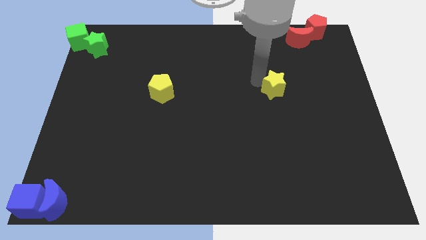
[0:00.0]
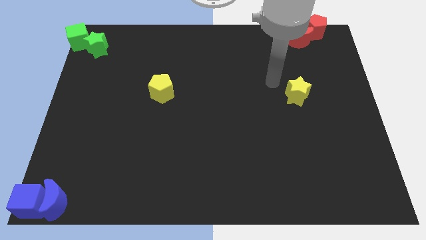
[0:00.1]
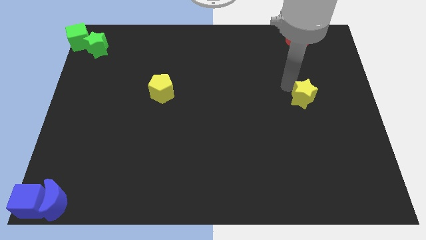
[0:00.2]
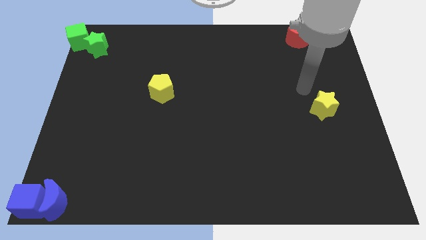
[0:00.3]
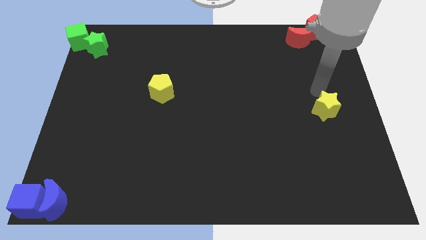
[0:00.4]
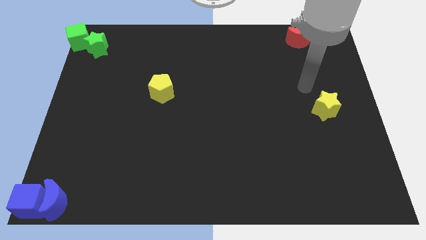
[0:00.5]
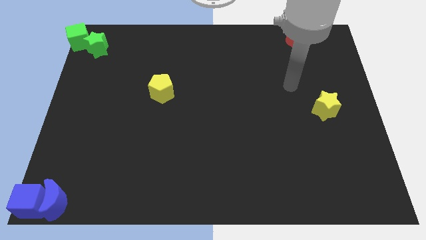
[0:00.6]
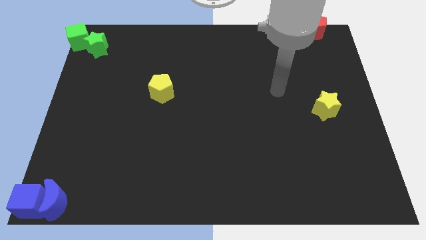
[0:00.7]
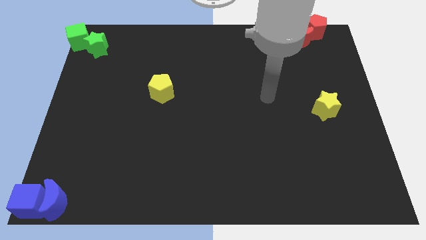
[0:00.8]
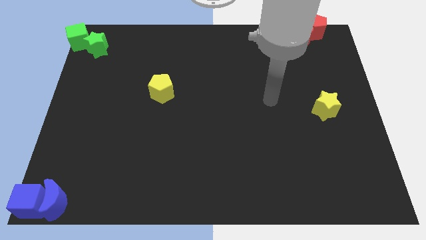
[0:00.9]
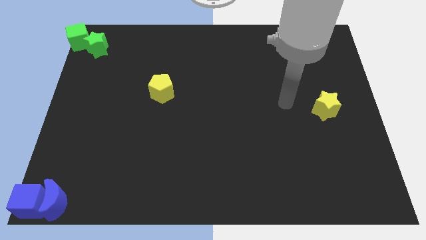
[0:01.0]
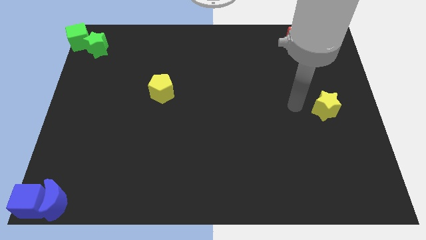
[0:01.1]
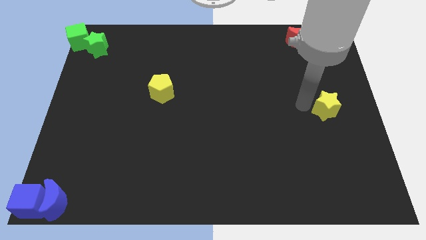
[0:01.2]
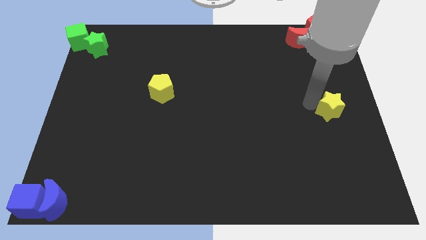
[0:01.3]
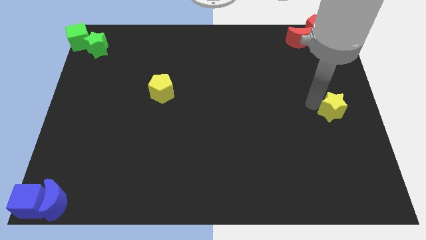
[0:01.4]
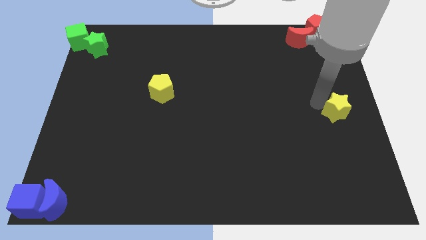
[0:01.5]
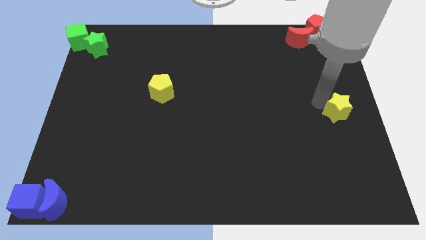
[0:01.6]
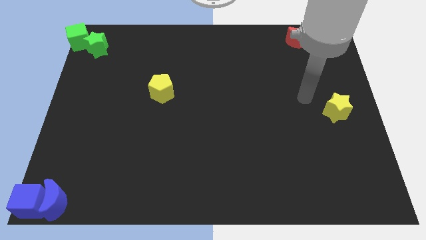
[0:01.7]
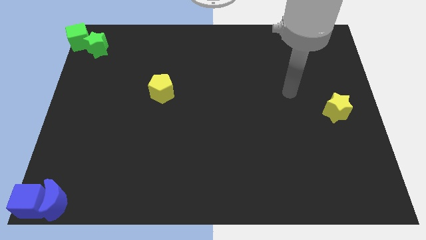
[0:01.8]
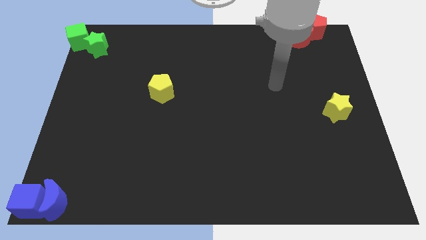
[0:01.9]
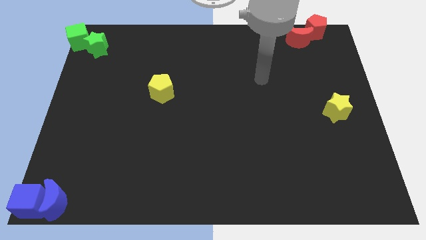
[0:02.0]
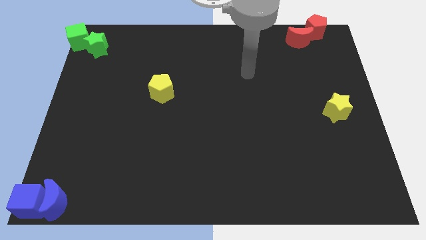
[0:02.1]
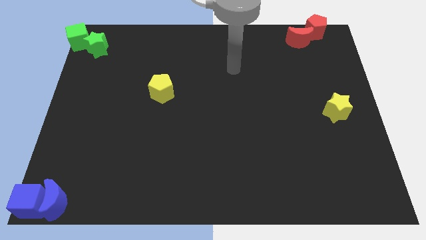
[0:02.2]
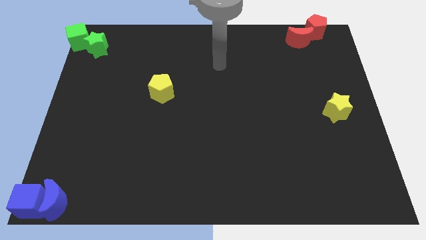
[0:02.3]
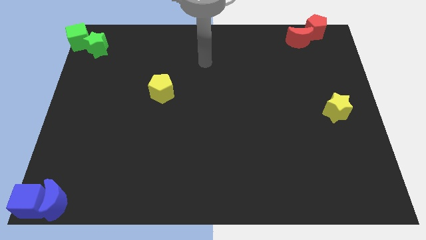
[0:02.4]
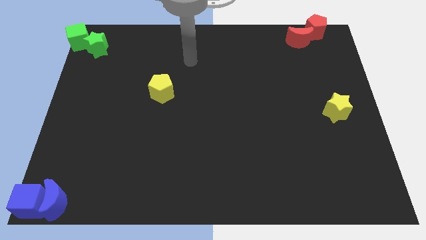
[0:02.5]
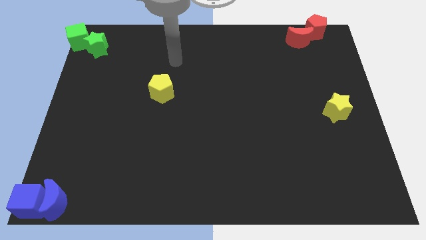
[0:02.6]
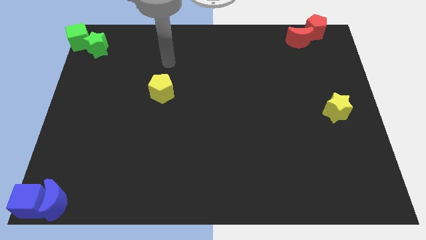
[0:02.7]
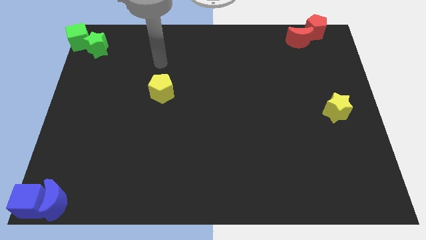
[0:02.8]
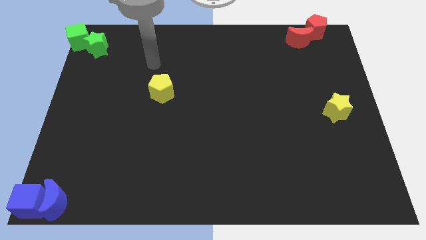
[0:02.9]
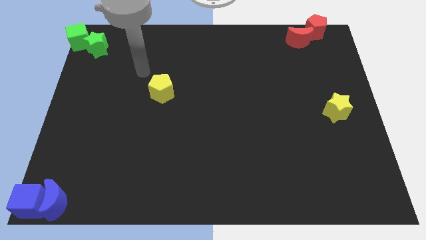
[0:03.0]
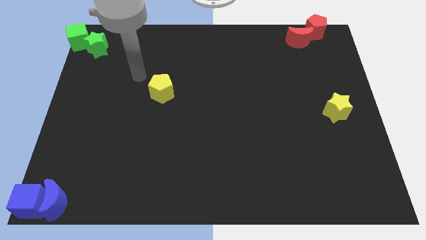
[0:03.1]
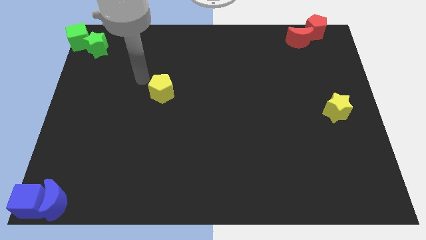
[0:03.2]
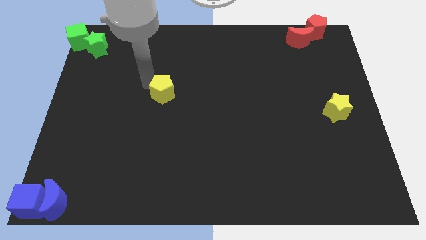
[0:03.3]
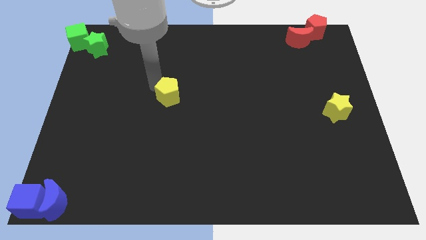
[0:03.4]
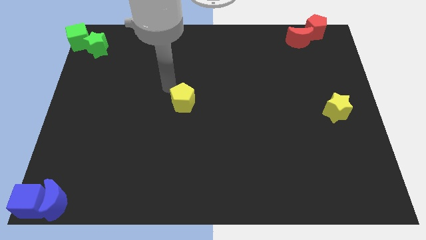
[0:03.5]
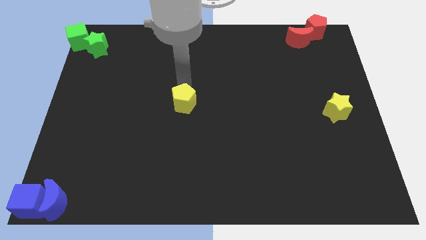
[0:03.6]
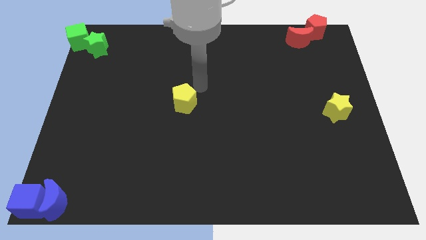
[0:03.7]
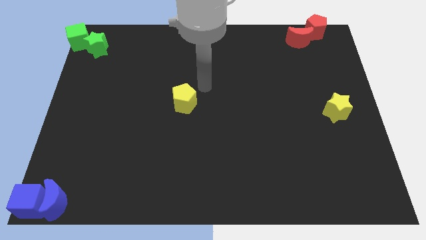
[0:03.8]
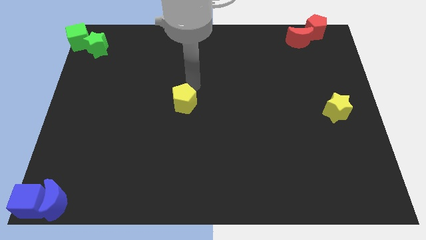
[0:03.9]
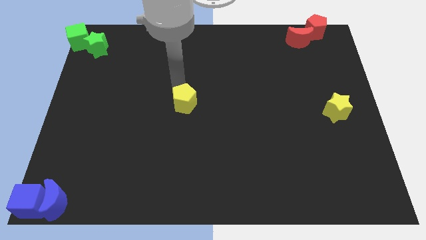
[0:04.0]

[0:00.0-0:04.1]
move the yellow star parallel to the right of the yellow pentagon

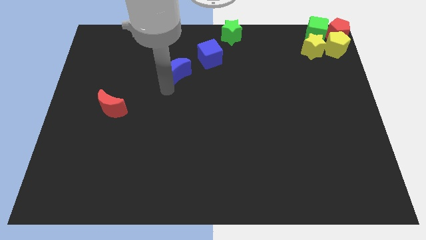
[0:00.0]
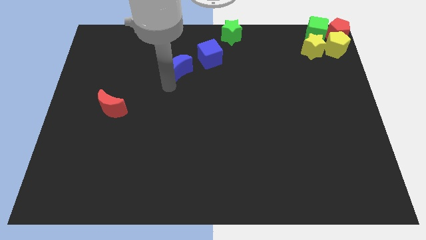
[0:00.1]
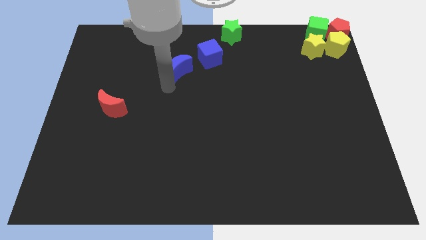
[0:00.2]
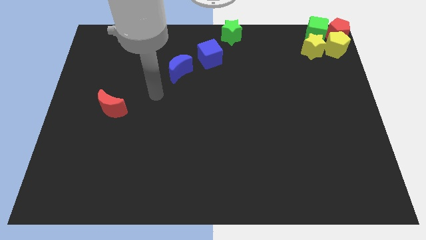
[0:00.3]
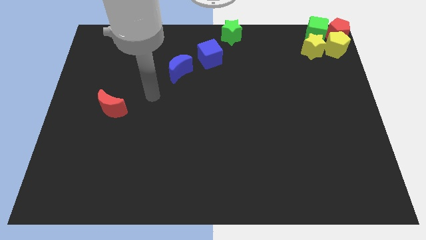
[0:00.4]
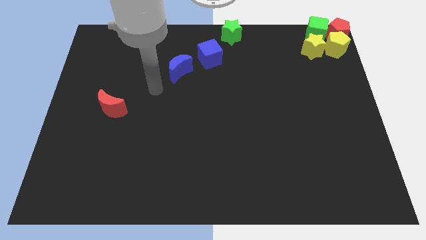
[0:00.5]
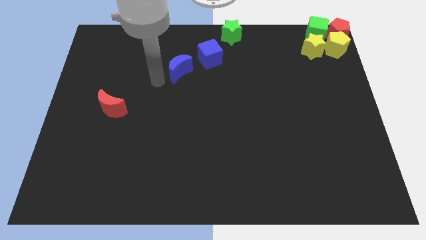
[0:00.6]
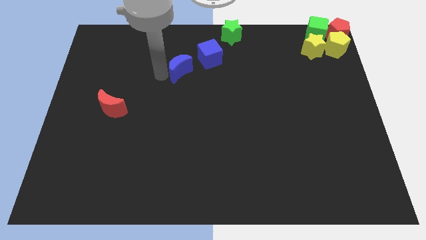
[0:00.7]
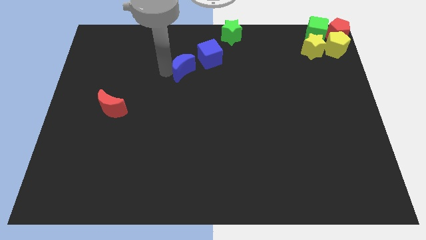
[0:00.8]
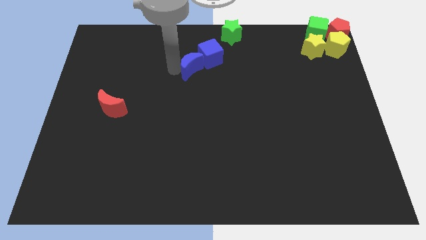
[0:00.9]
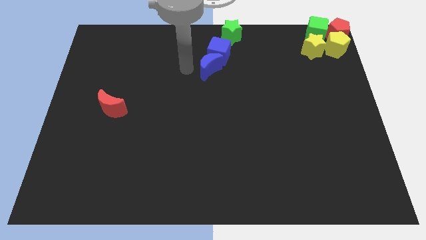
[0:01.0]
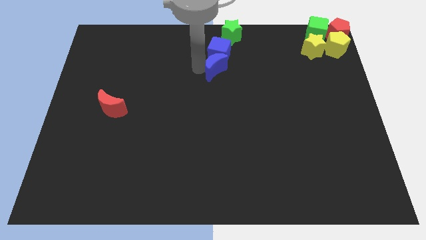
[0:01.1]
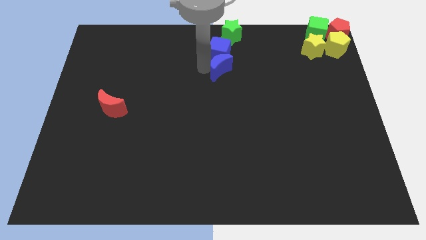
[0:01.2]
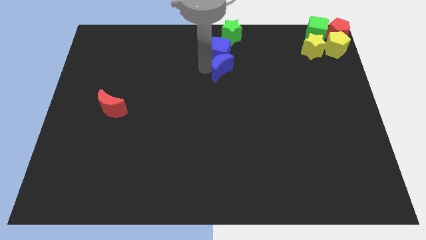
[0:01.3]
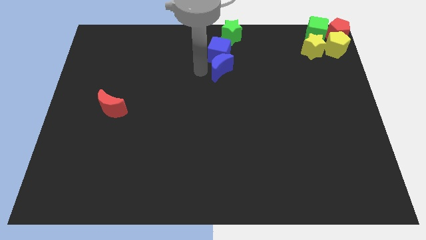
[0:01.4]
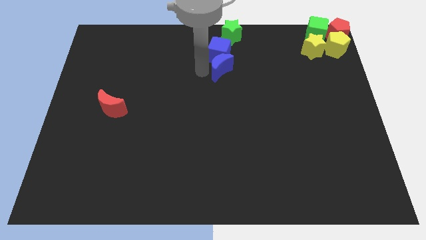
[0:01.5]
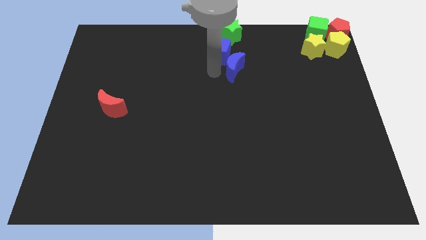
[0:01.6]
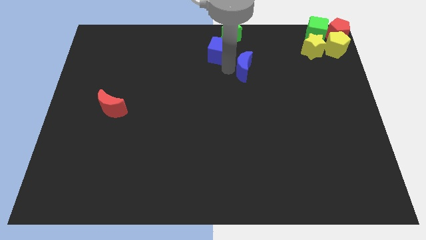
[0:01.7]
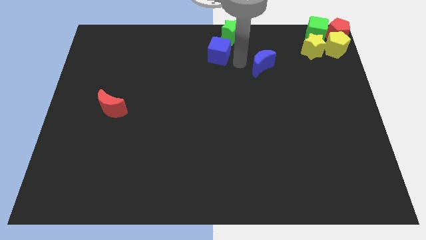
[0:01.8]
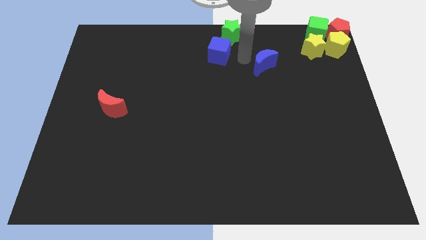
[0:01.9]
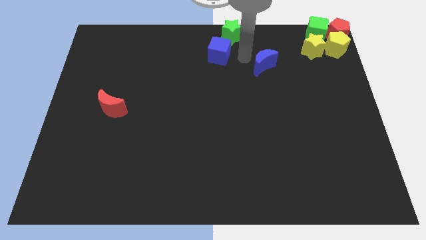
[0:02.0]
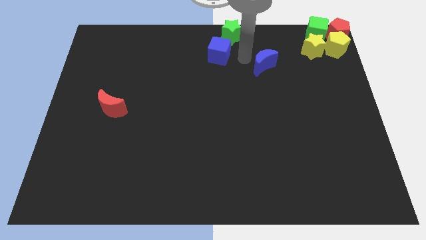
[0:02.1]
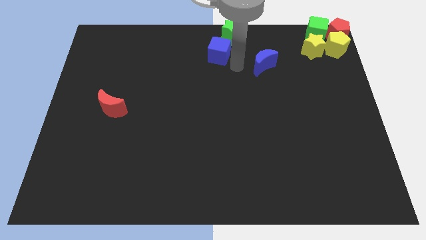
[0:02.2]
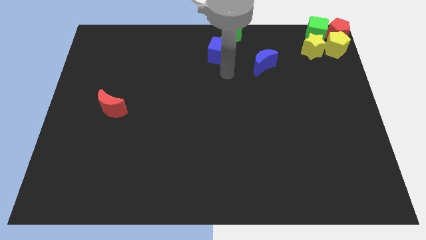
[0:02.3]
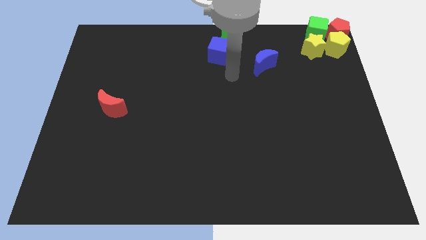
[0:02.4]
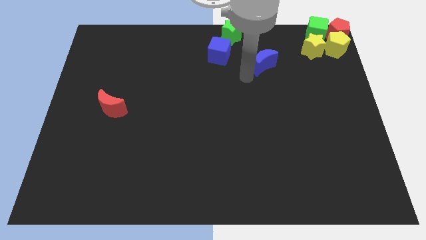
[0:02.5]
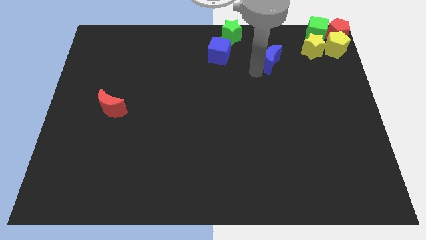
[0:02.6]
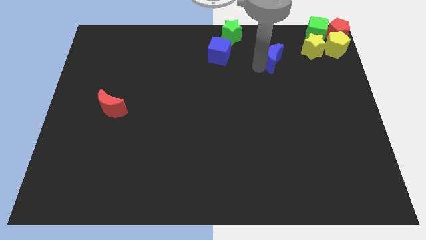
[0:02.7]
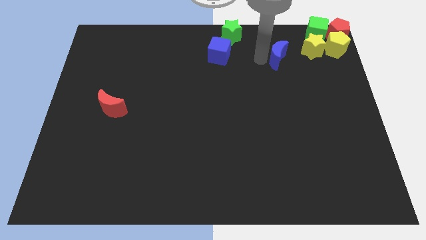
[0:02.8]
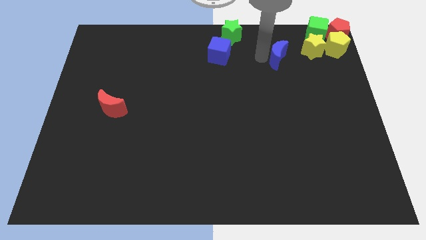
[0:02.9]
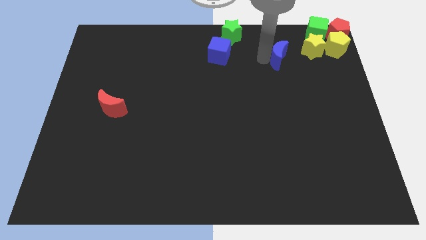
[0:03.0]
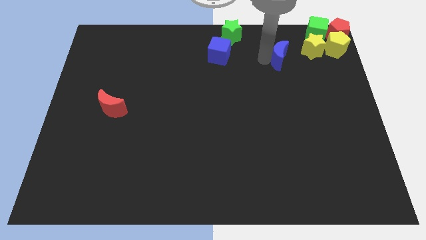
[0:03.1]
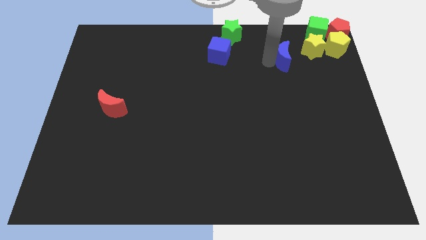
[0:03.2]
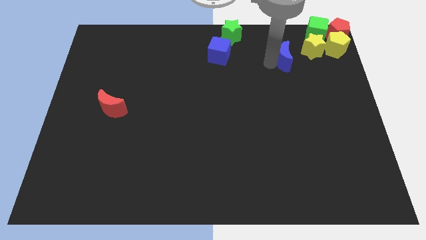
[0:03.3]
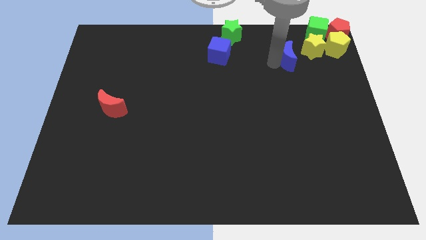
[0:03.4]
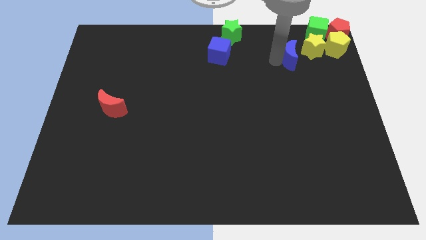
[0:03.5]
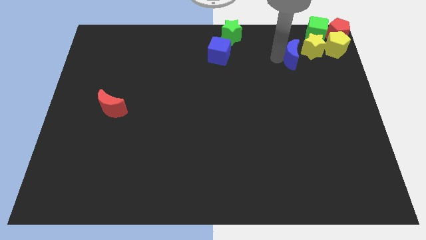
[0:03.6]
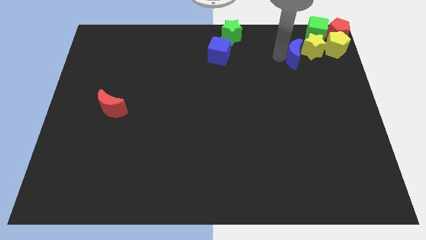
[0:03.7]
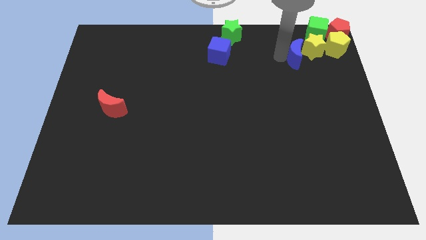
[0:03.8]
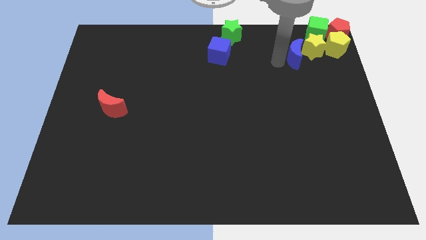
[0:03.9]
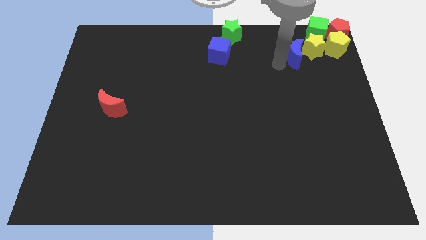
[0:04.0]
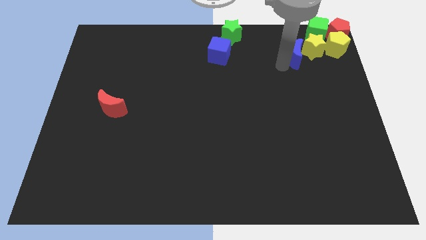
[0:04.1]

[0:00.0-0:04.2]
move the blue moon left beside the yellow star

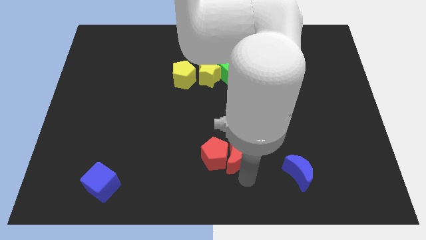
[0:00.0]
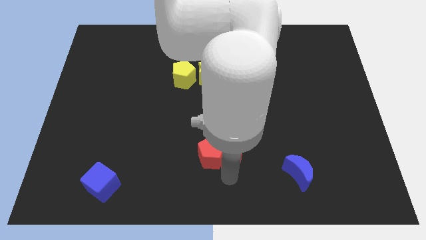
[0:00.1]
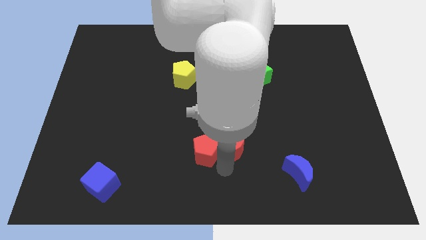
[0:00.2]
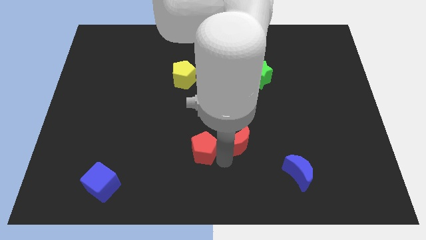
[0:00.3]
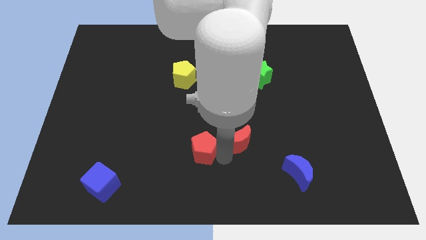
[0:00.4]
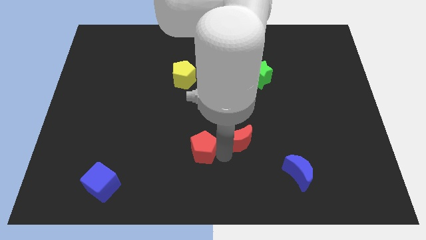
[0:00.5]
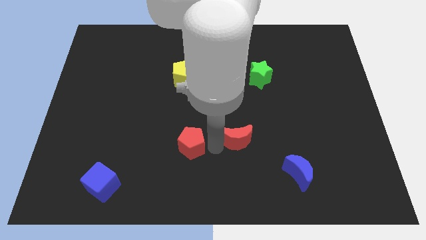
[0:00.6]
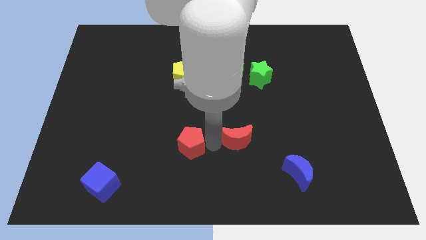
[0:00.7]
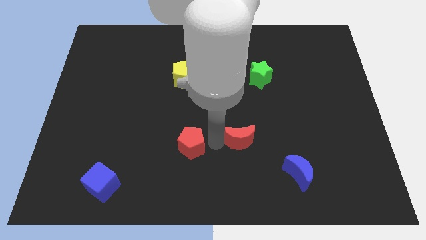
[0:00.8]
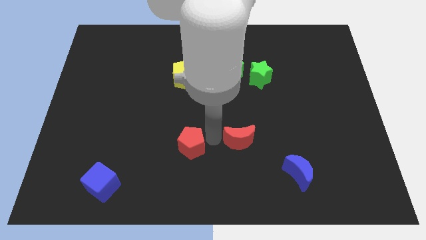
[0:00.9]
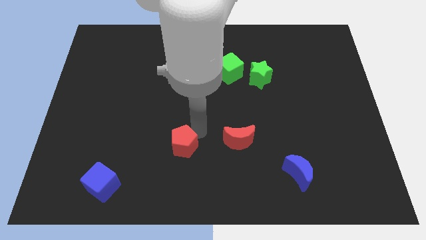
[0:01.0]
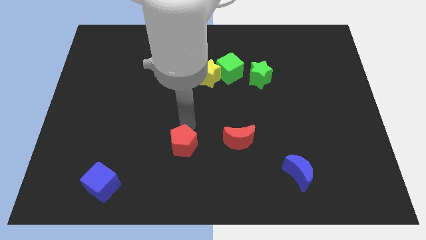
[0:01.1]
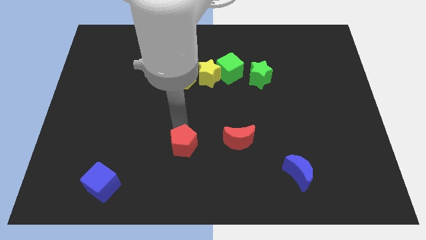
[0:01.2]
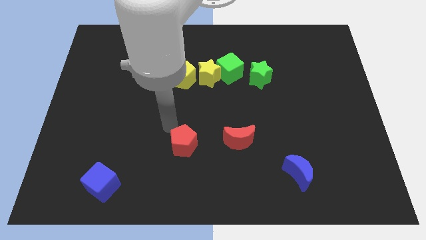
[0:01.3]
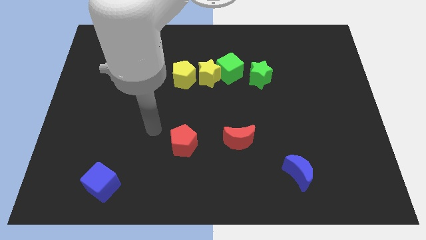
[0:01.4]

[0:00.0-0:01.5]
move away the red pentagon from the red crescent
